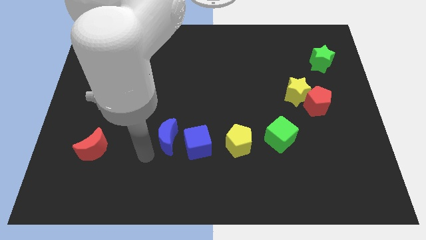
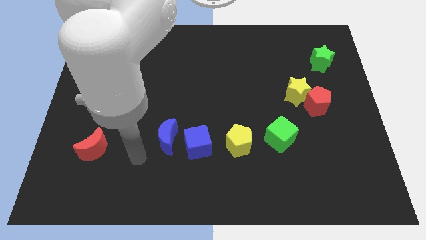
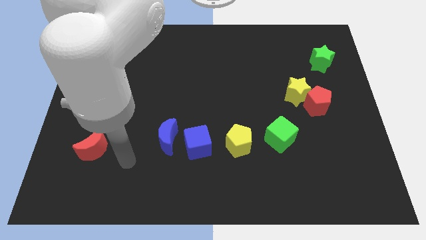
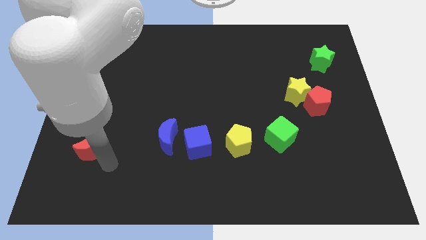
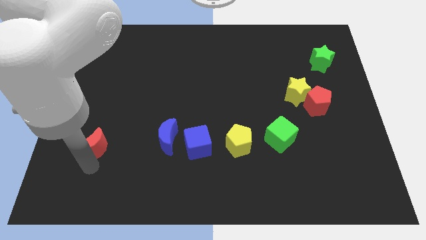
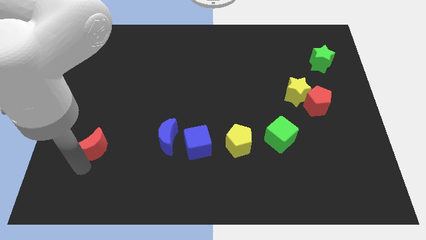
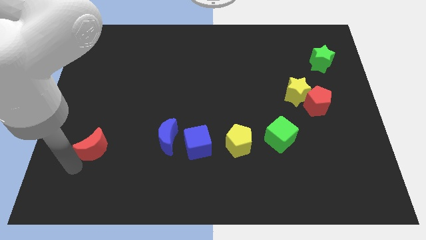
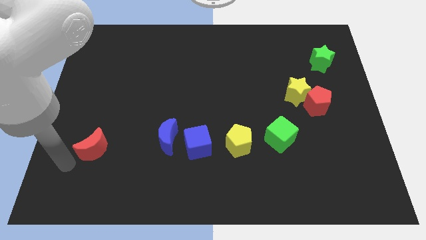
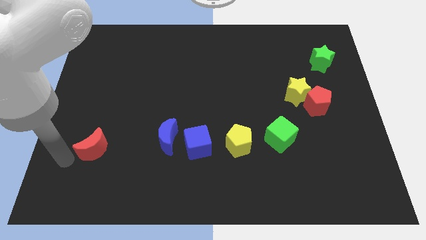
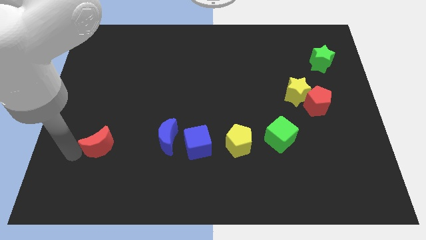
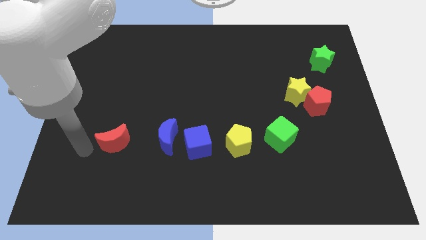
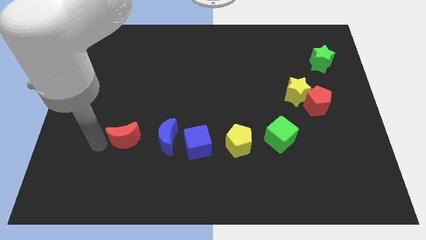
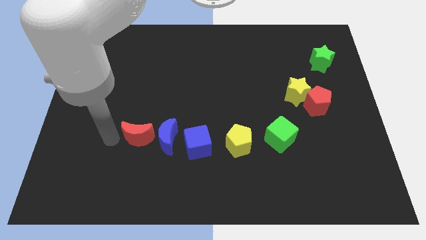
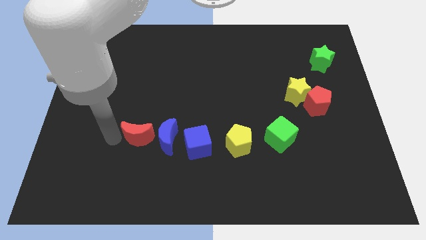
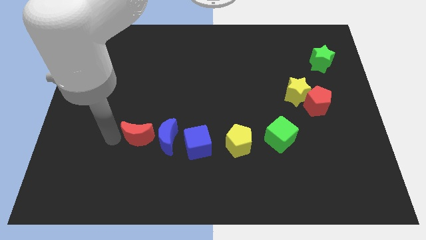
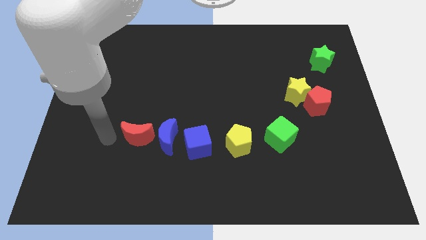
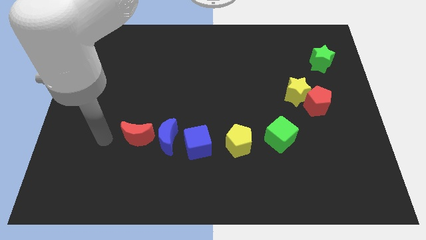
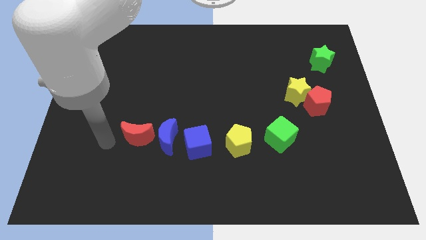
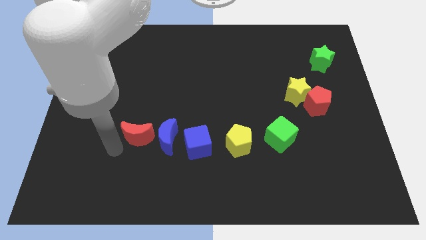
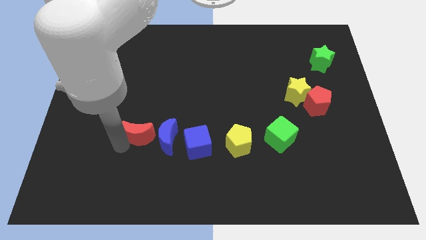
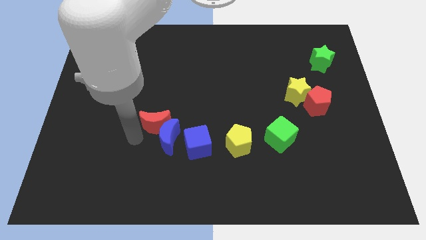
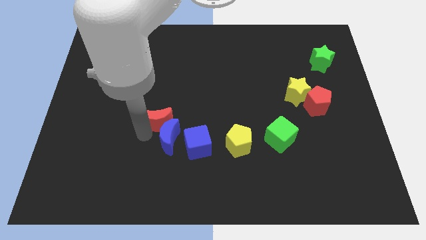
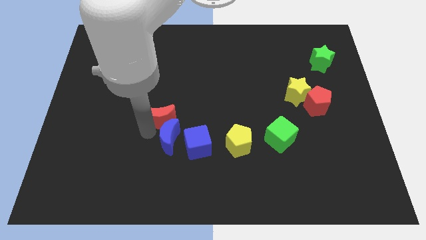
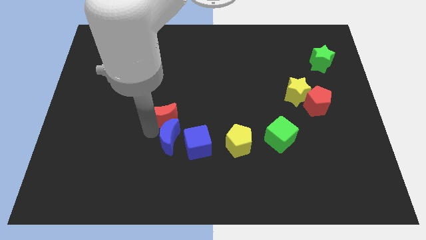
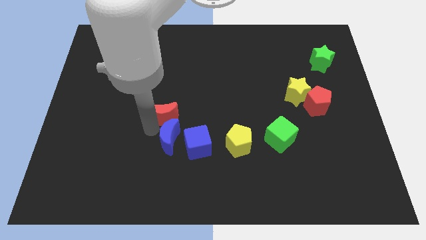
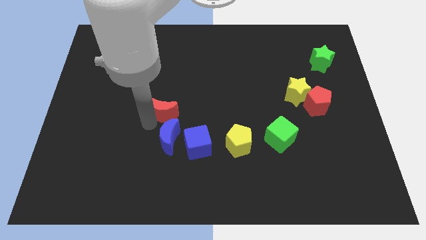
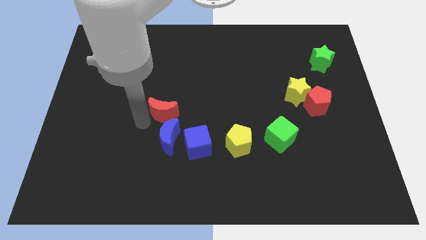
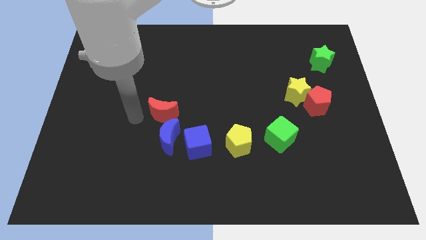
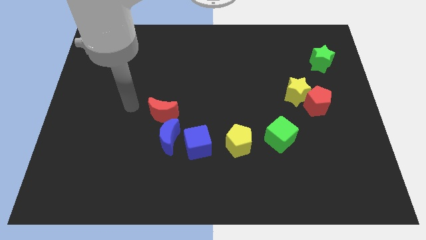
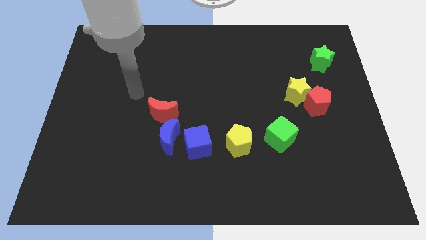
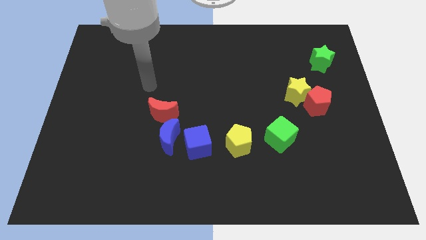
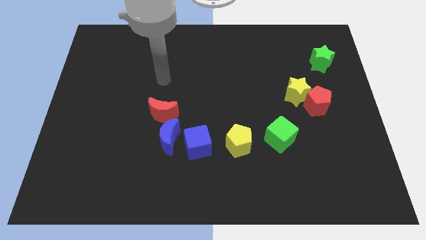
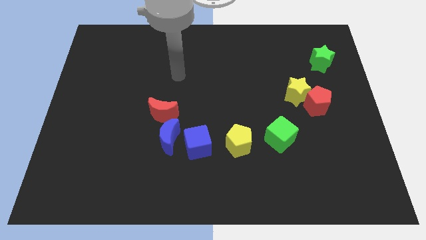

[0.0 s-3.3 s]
push the red crescent to the top of the blue crescent

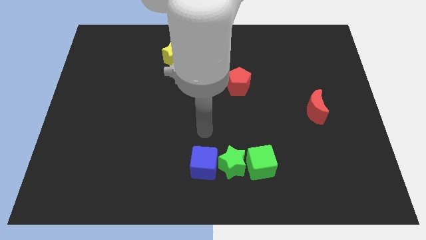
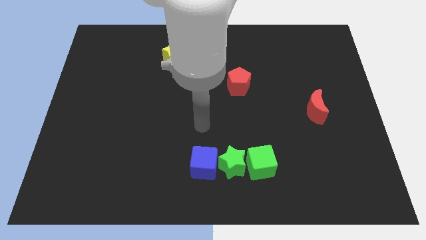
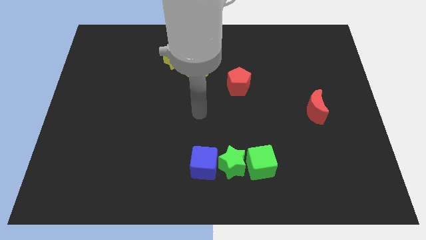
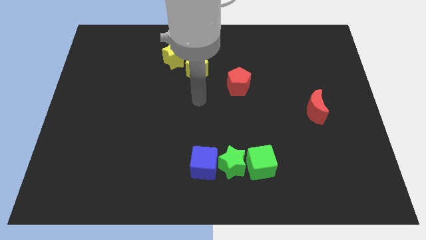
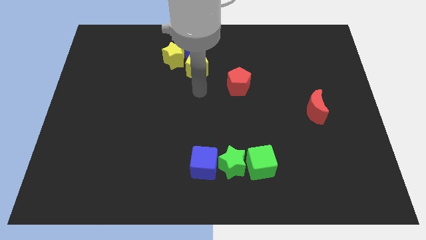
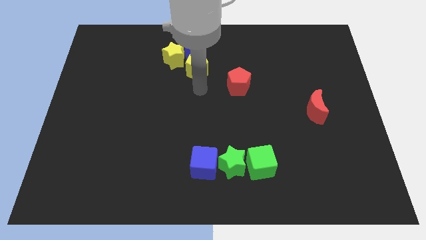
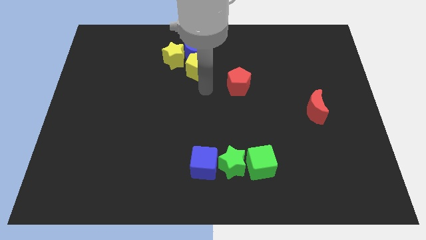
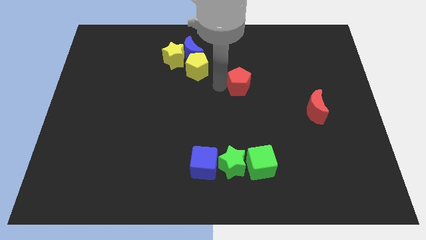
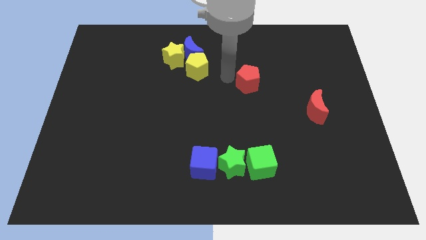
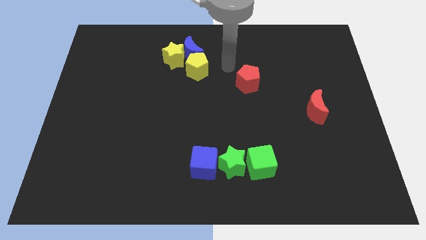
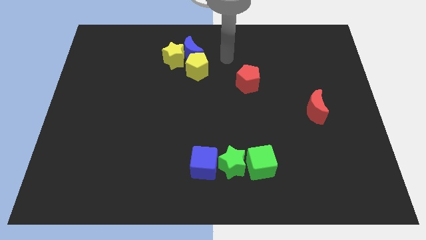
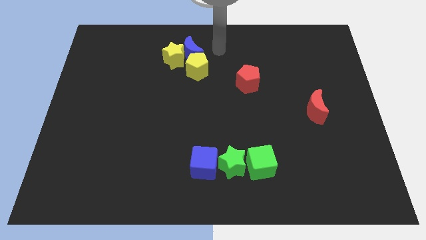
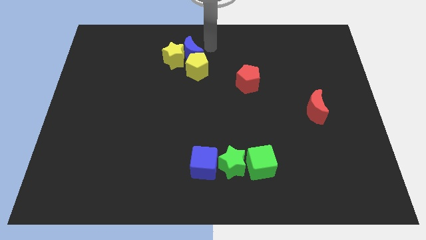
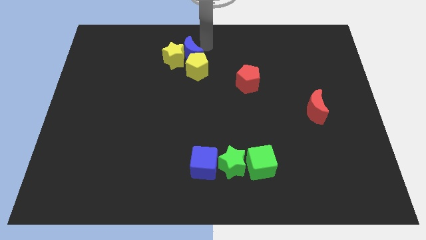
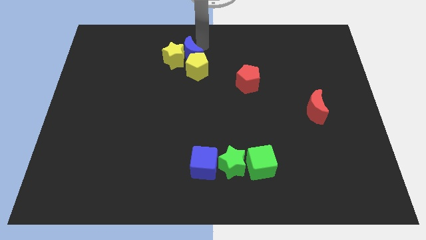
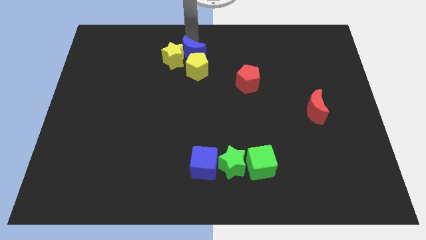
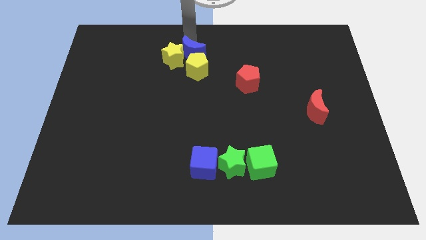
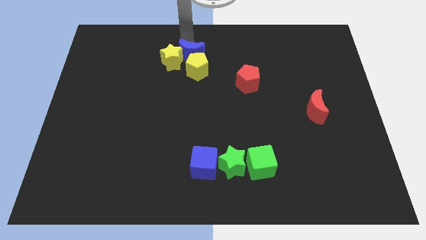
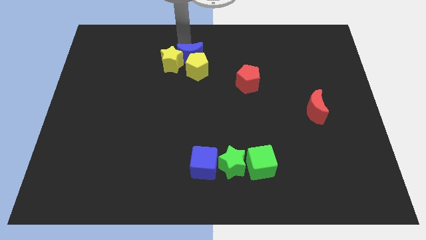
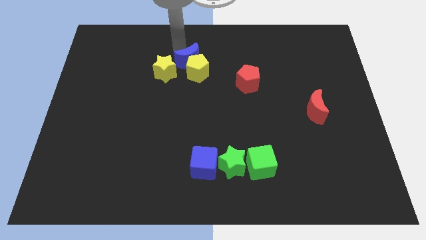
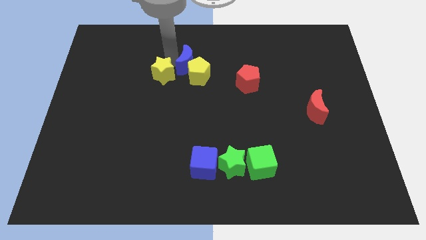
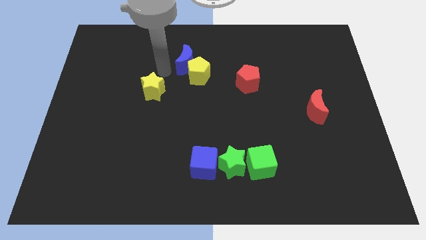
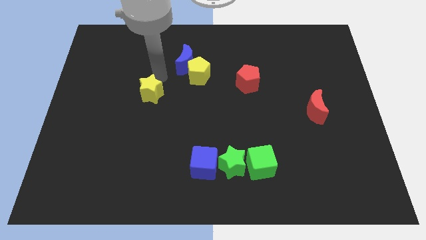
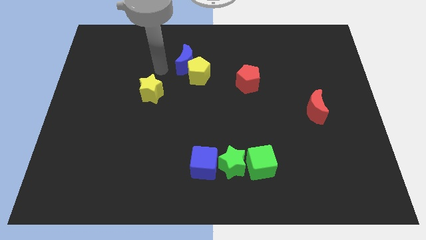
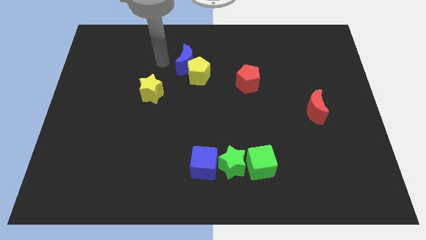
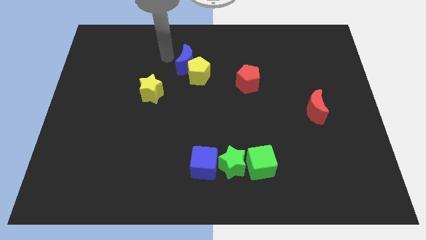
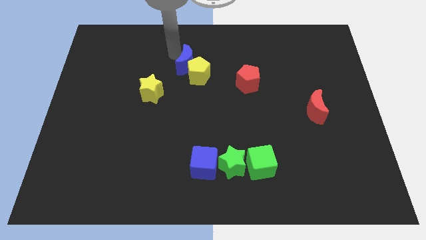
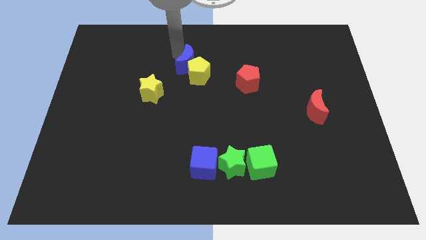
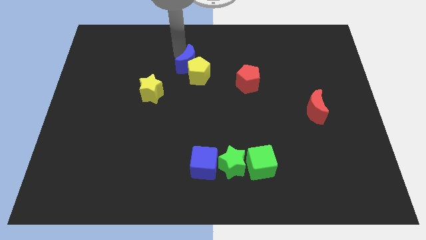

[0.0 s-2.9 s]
separate the yellow star from the blue crescent

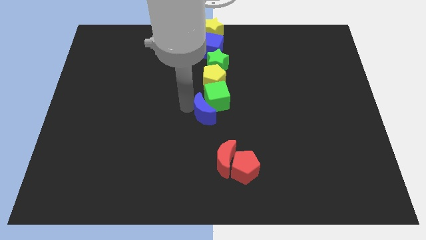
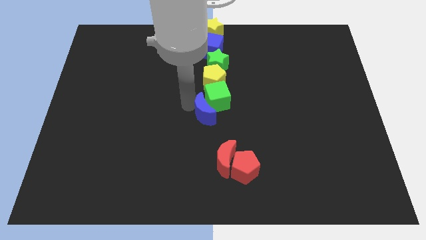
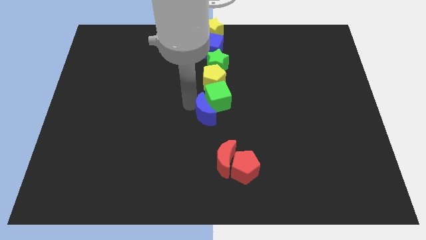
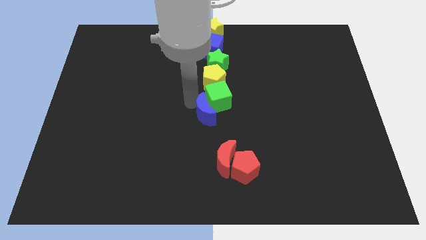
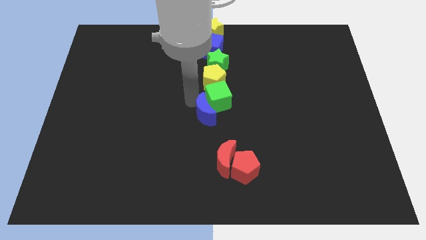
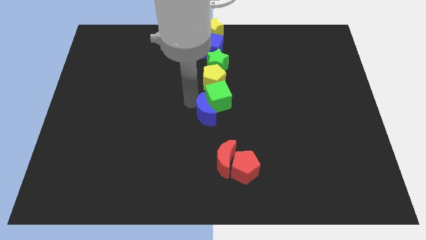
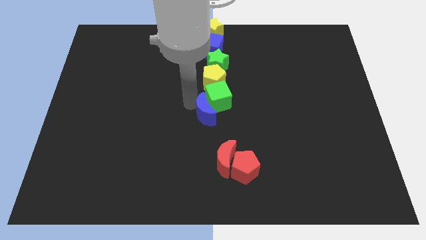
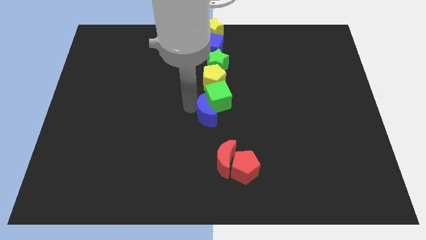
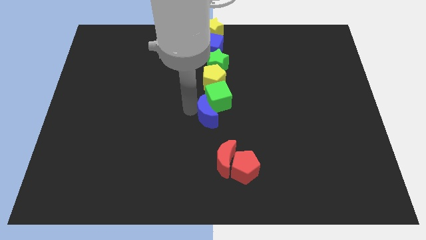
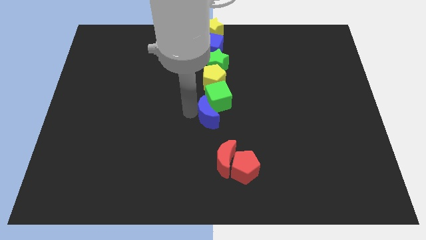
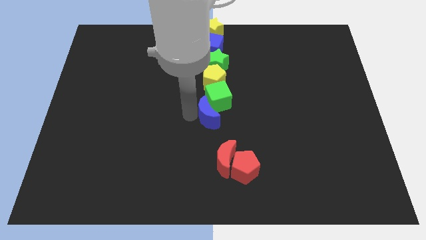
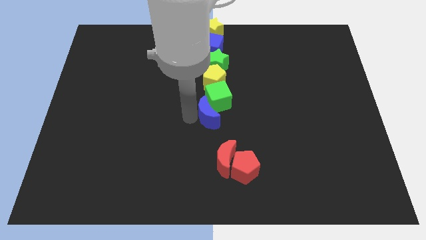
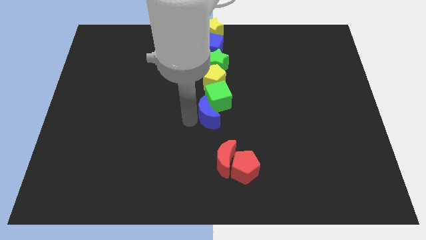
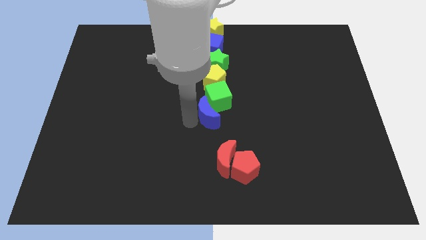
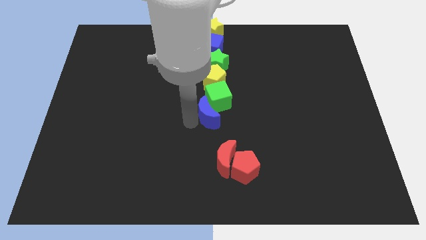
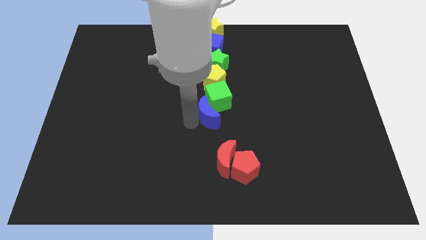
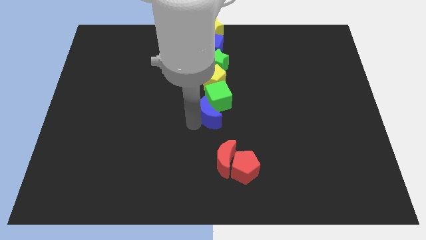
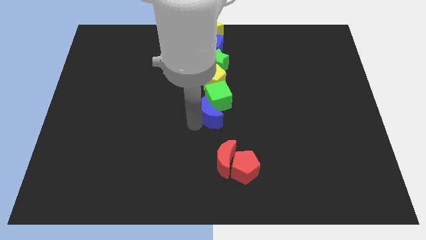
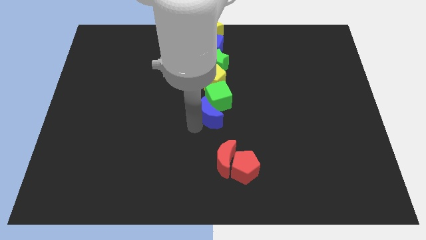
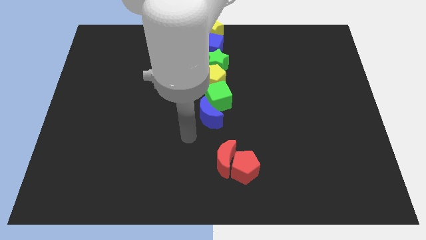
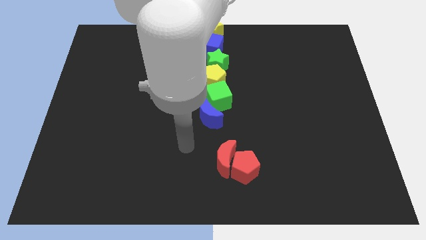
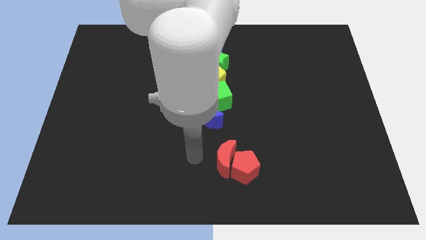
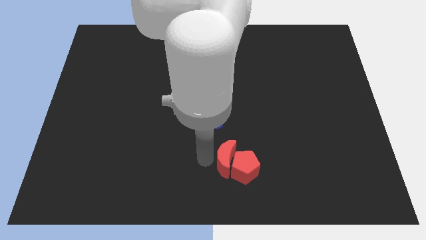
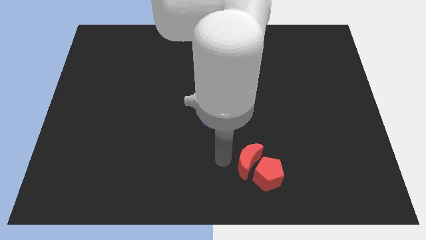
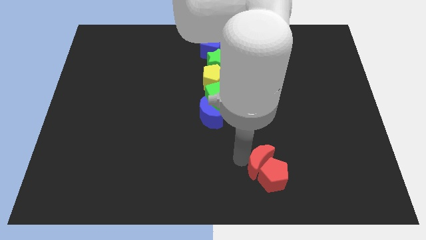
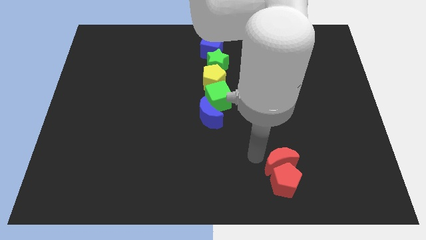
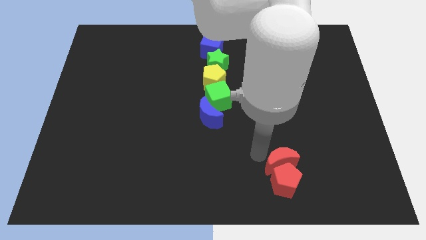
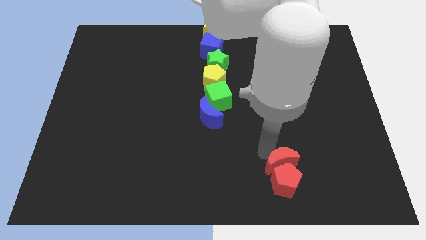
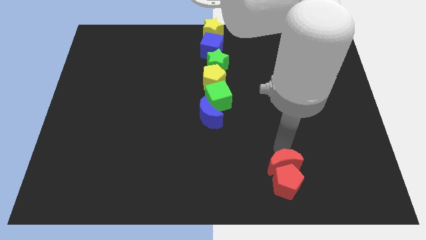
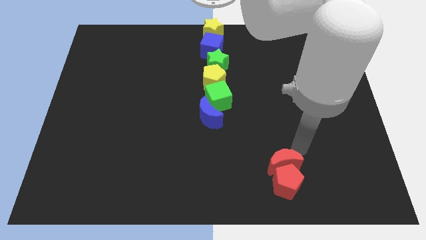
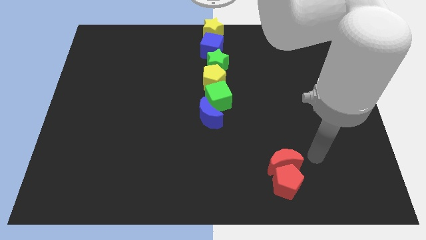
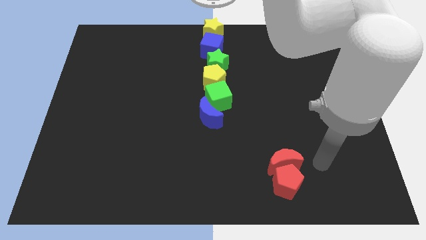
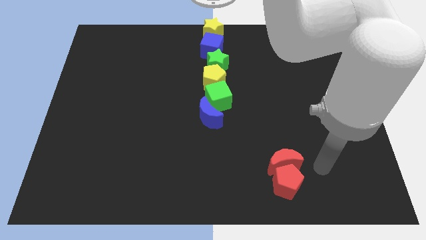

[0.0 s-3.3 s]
push the red blocks diagonally bottom right to the green cube
